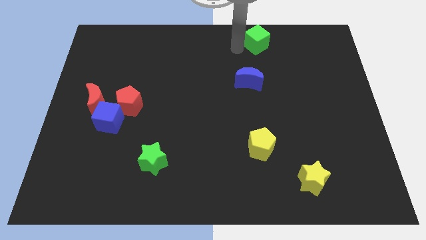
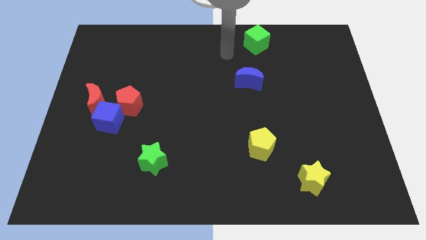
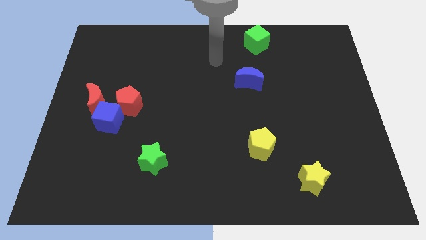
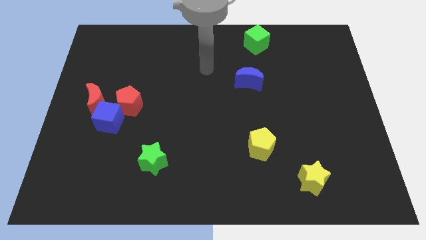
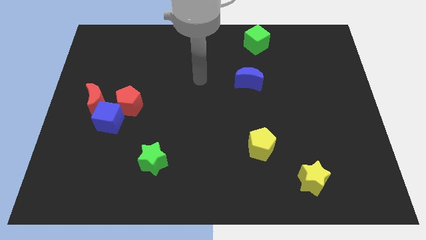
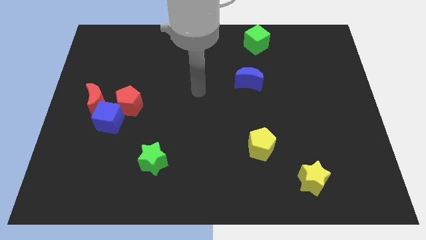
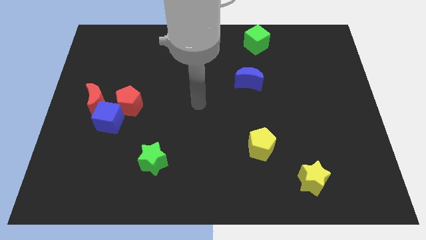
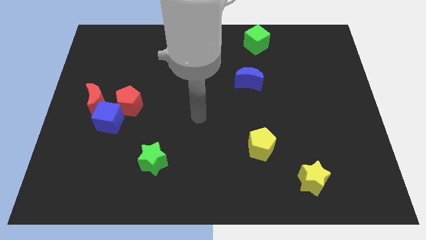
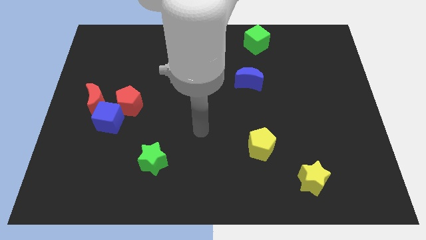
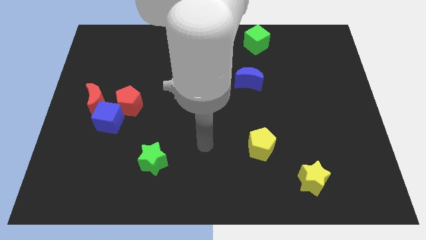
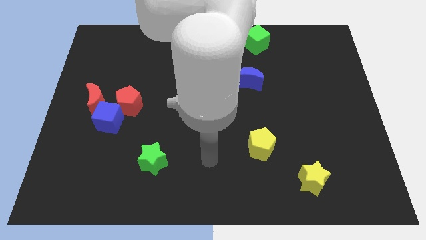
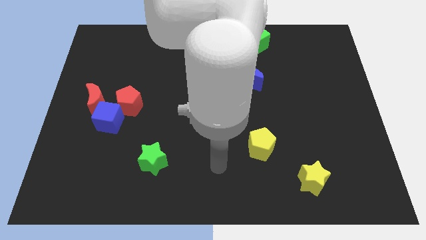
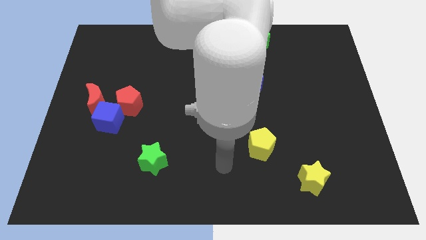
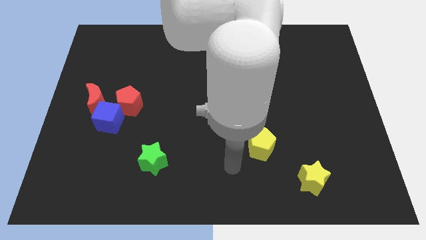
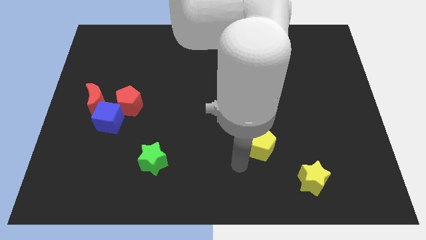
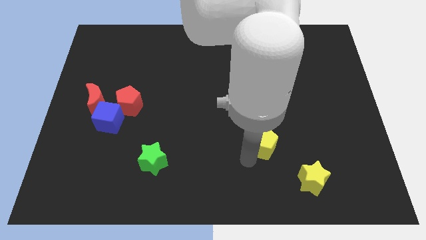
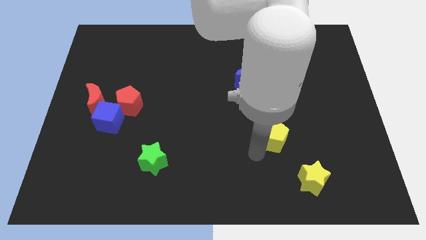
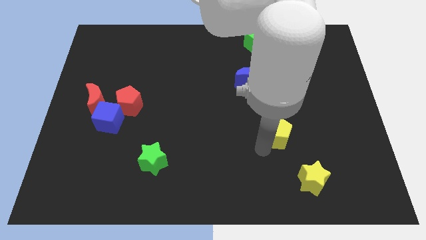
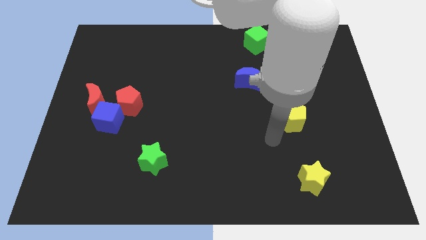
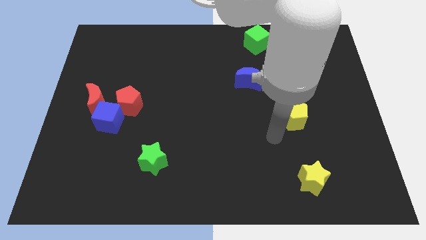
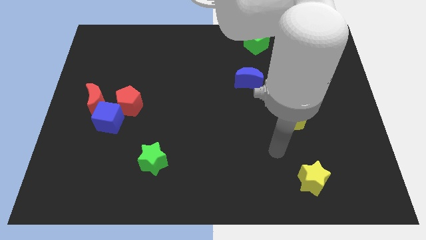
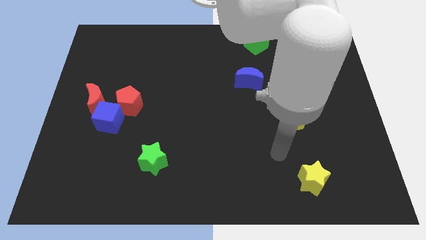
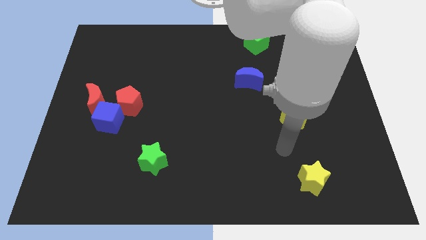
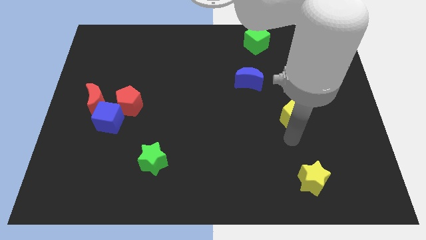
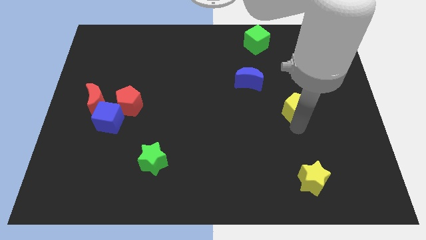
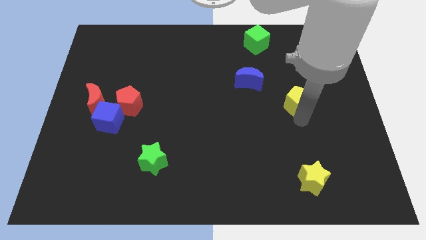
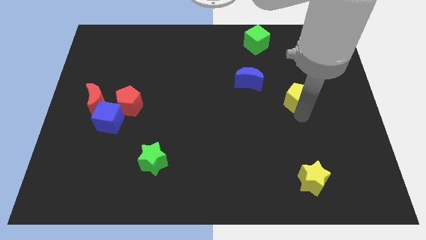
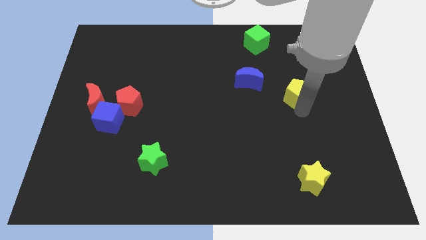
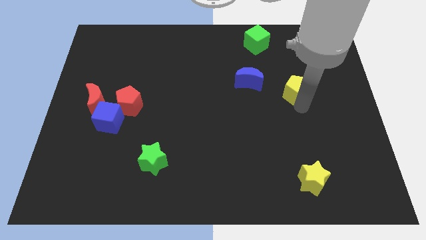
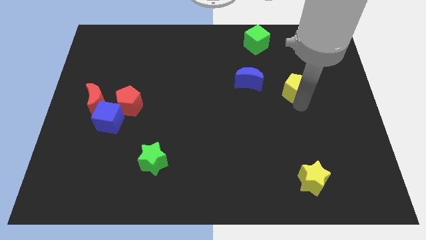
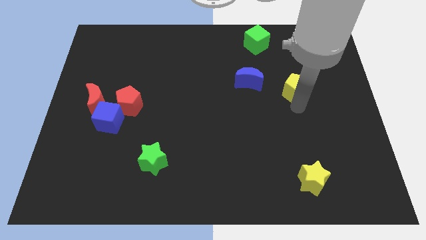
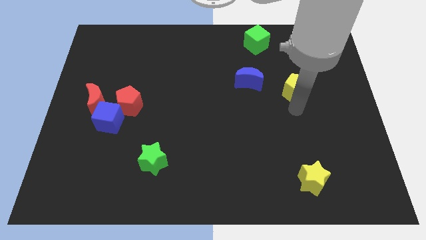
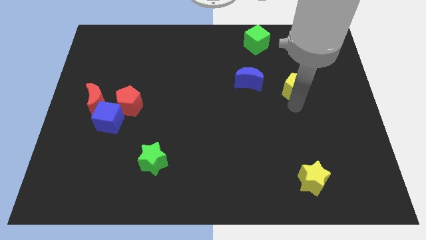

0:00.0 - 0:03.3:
slide the yellow pentagon to the right side of the blue crescent

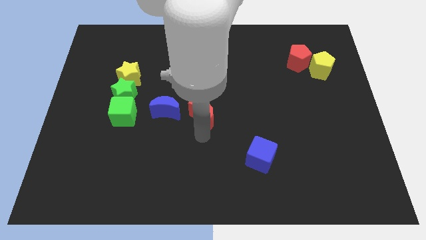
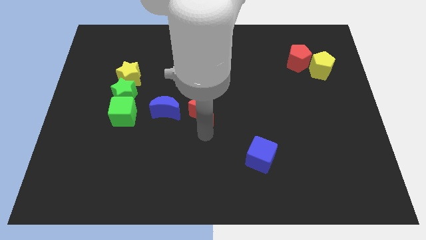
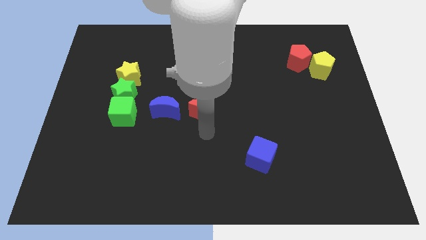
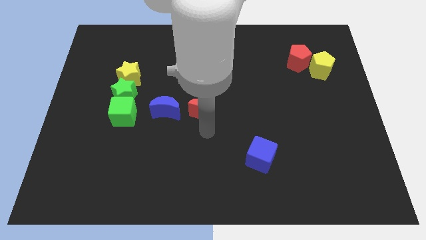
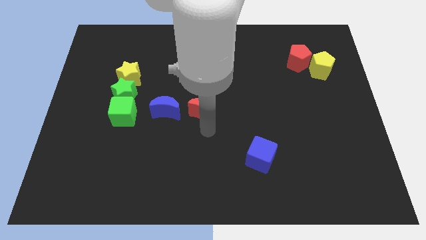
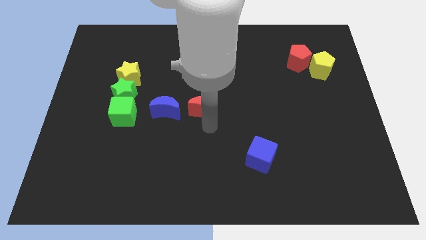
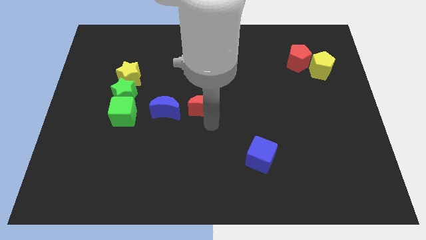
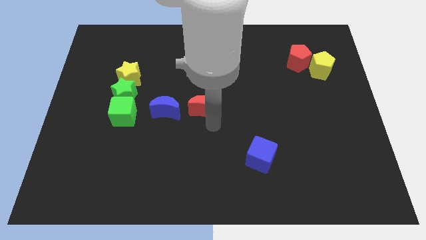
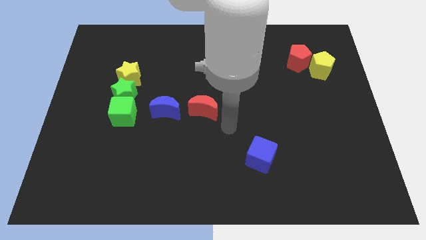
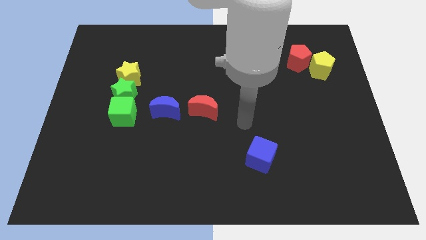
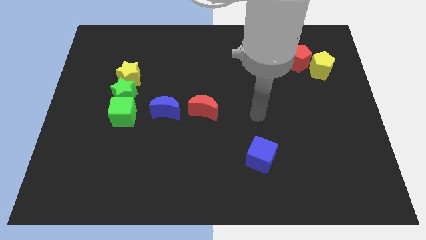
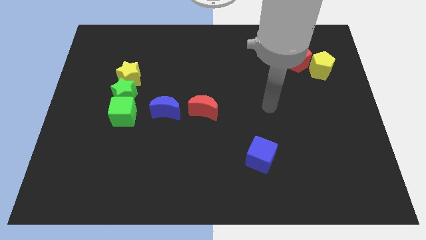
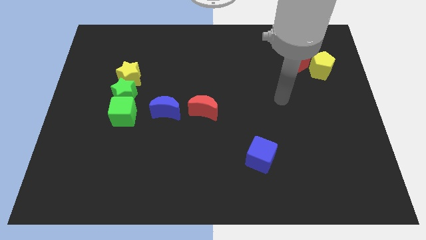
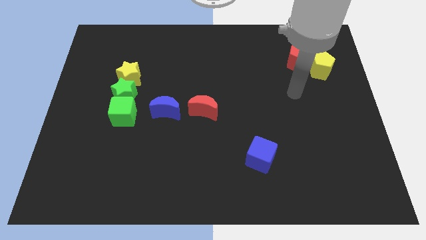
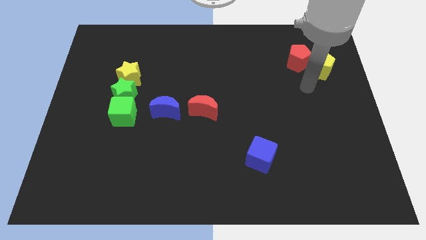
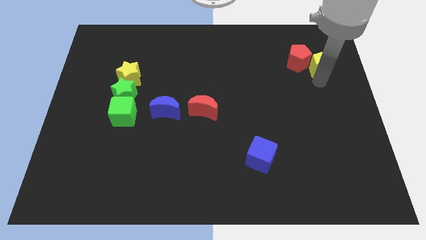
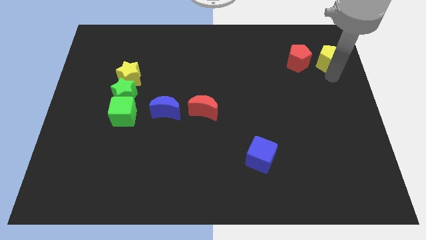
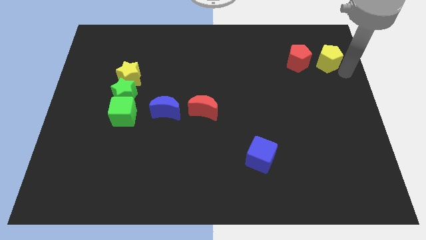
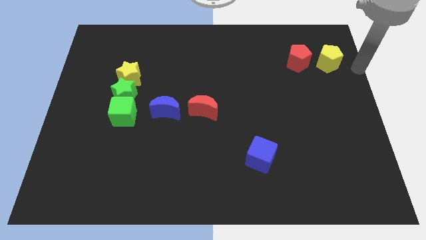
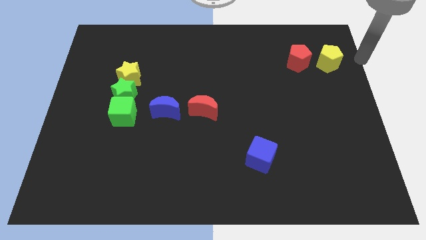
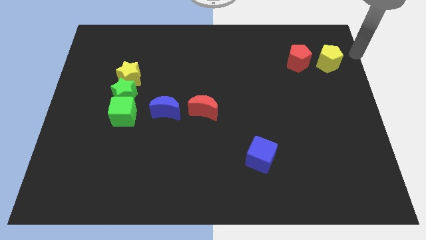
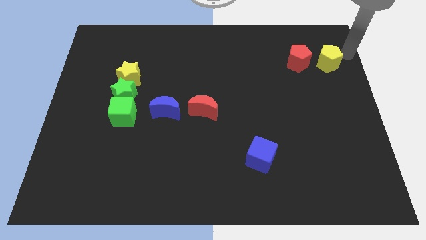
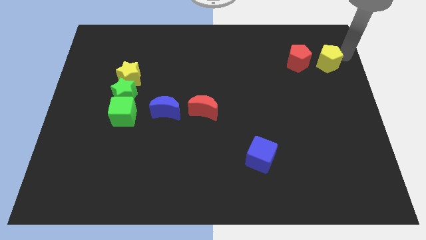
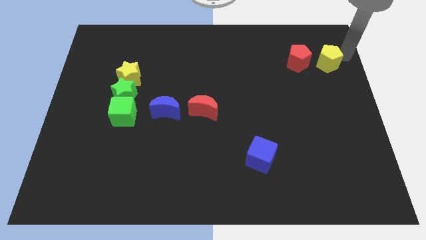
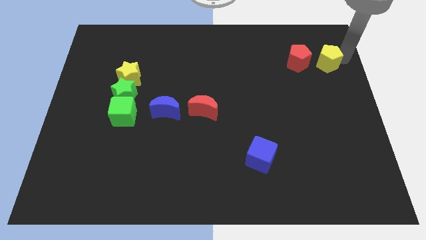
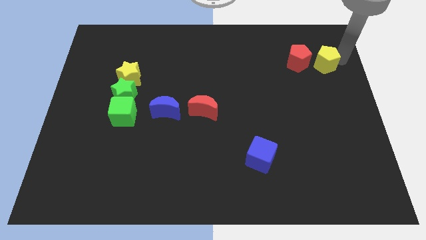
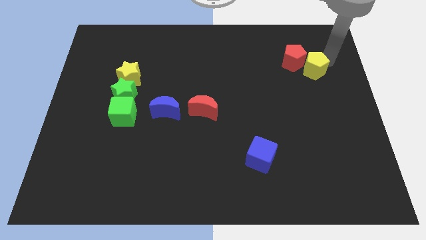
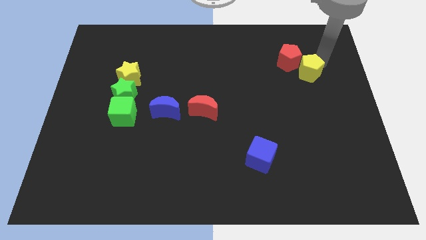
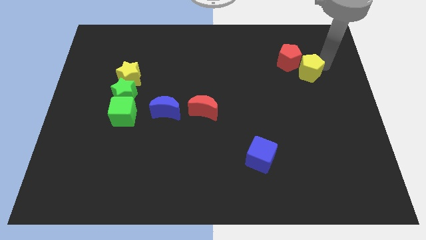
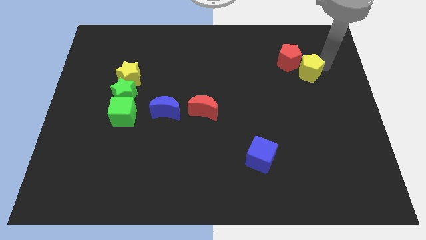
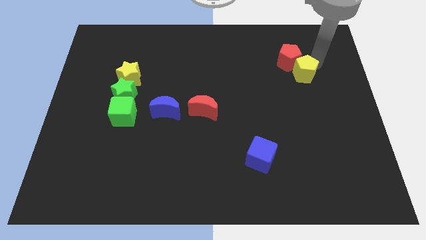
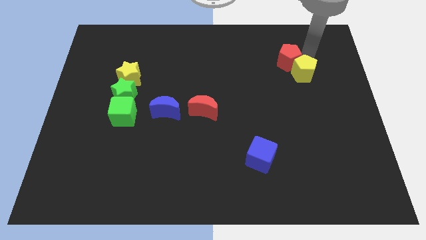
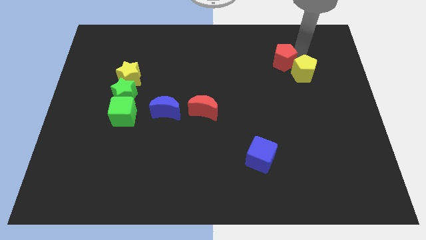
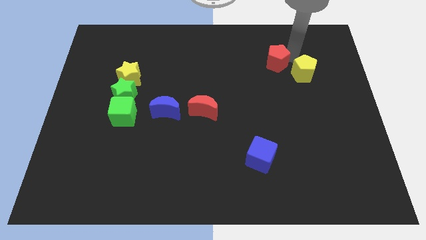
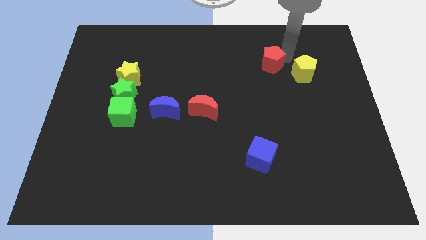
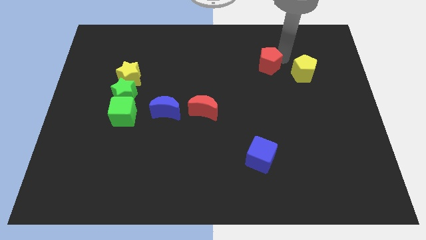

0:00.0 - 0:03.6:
push the yellow and red pentagon diagonally towards the center

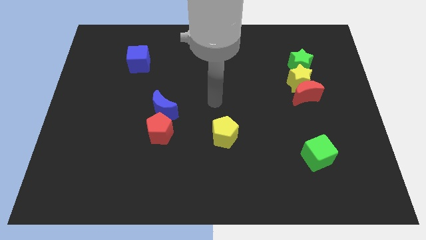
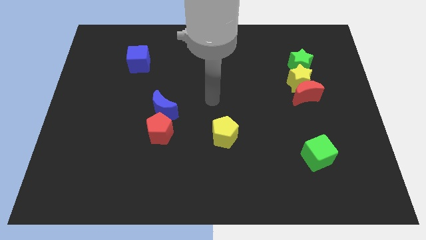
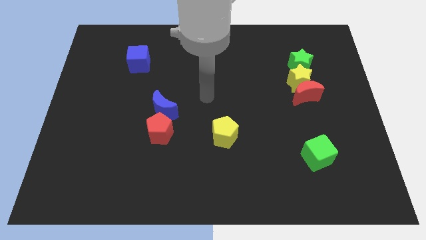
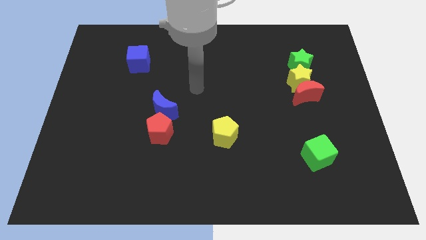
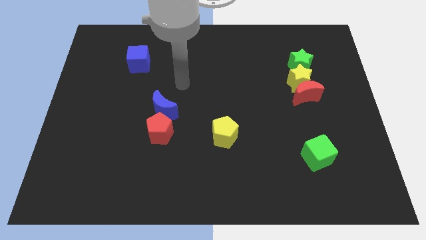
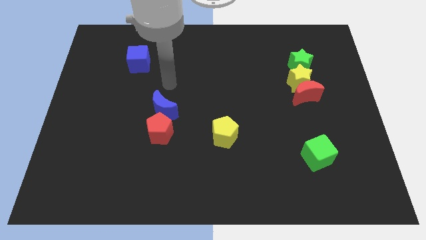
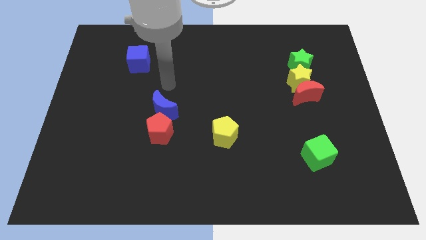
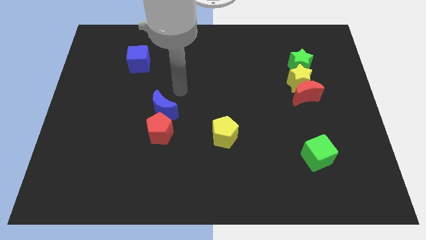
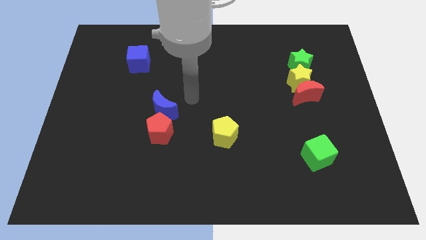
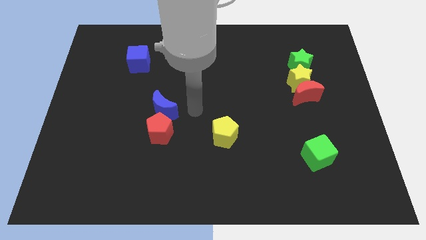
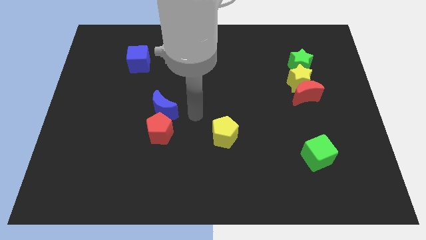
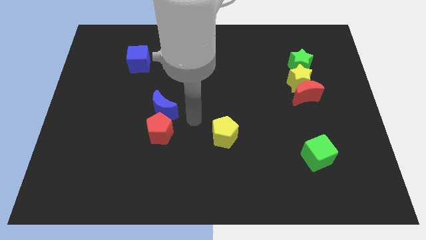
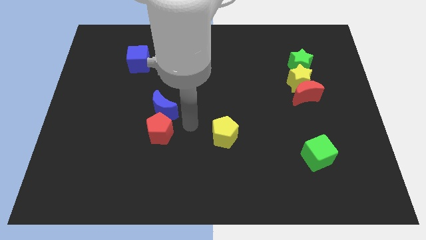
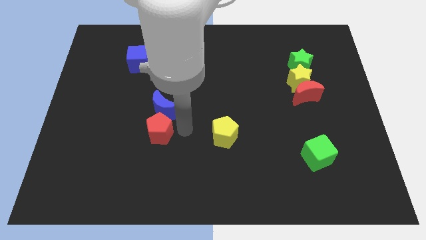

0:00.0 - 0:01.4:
point your arm at the right of the red pentagon

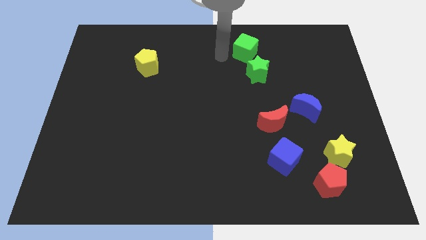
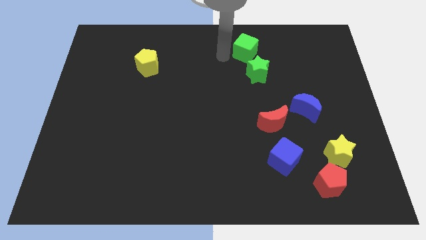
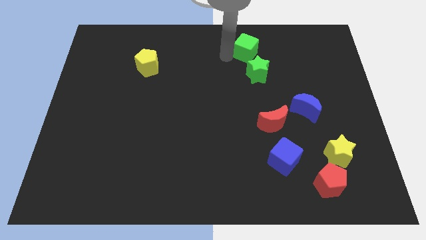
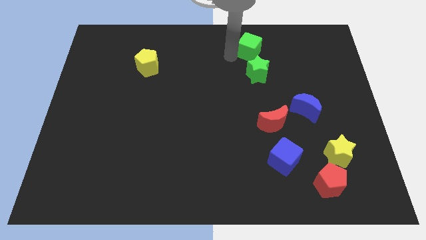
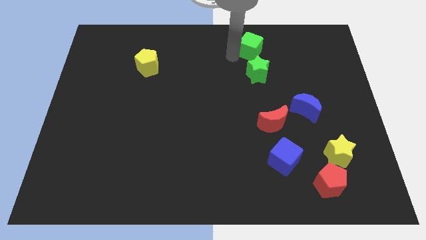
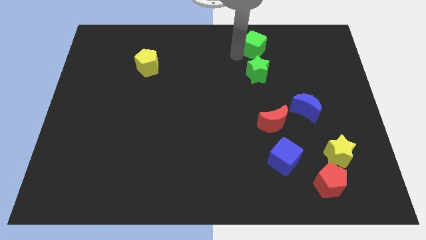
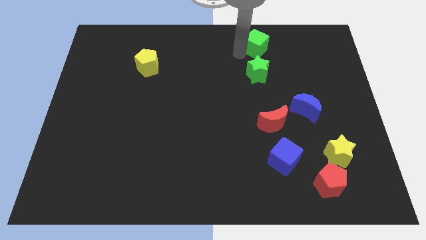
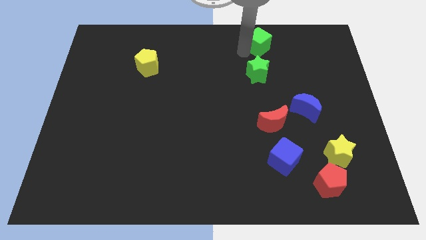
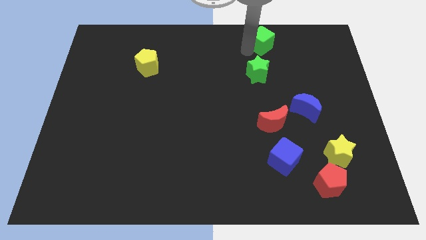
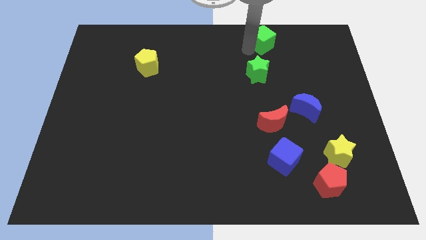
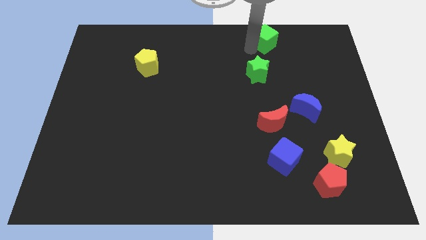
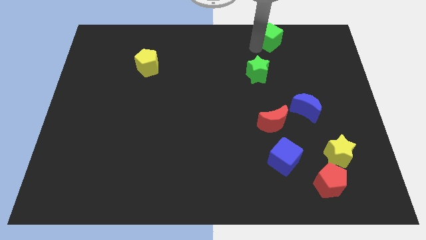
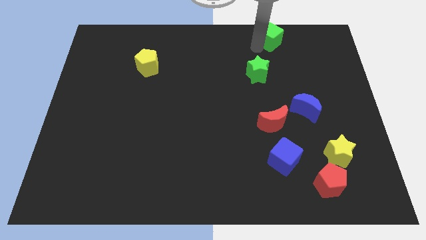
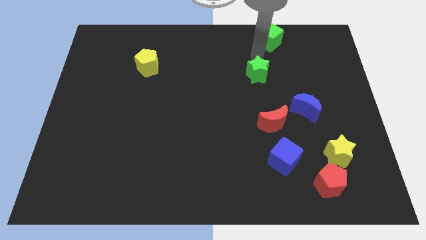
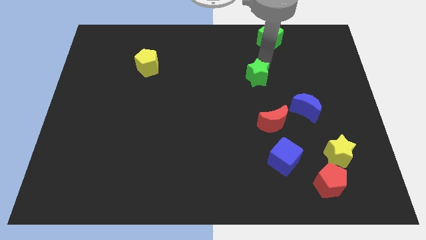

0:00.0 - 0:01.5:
move the green cube the top a bit
